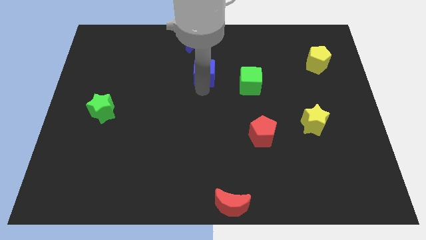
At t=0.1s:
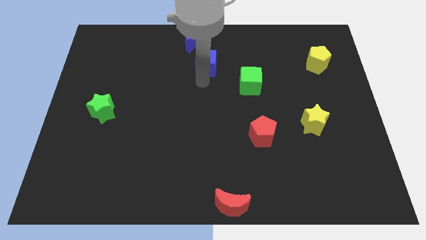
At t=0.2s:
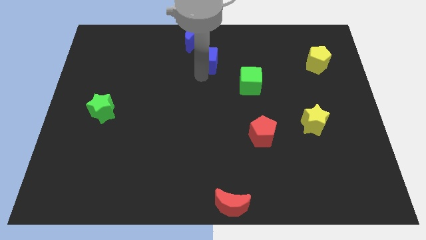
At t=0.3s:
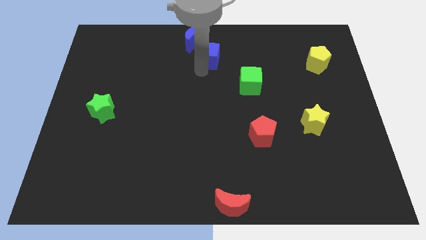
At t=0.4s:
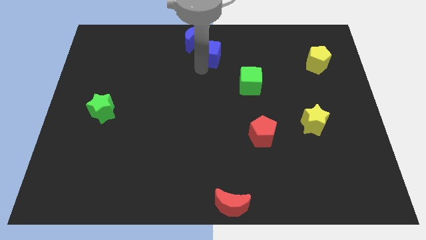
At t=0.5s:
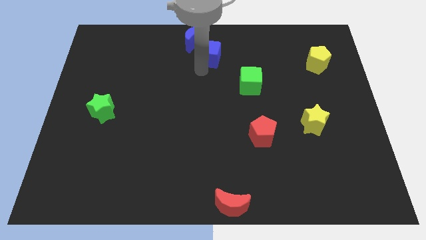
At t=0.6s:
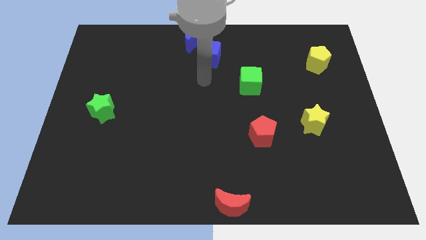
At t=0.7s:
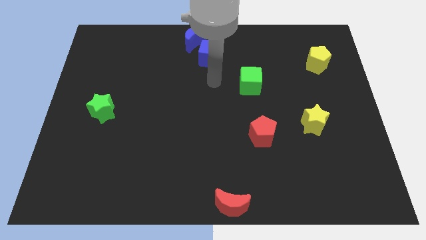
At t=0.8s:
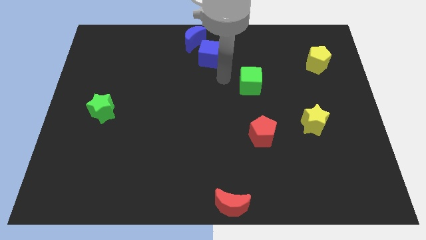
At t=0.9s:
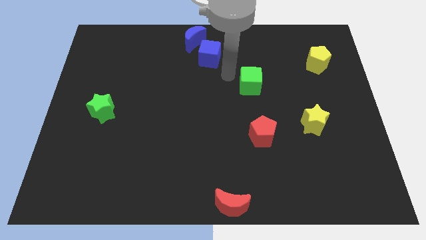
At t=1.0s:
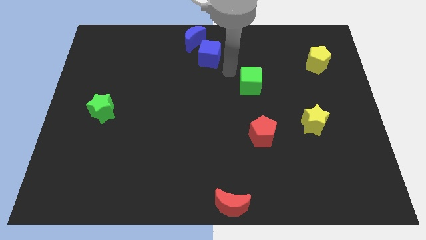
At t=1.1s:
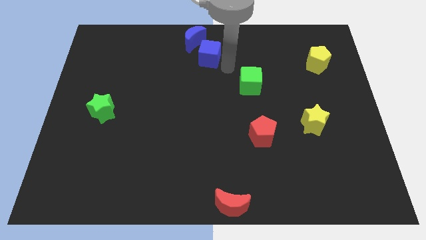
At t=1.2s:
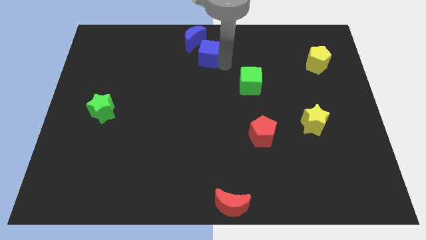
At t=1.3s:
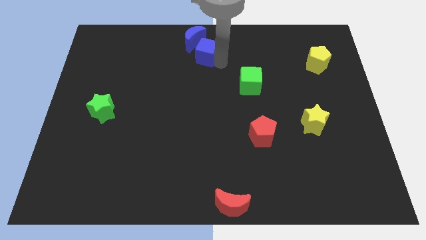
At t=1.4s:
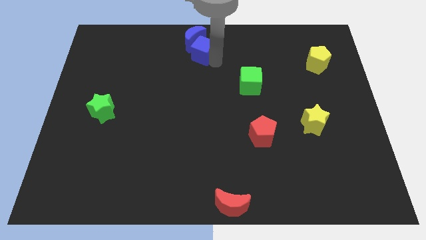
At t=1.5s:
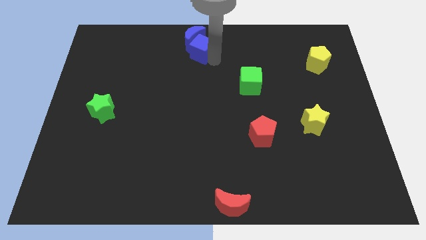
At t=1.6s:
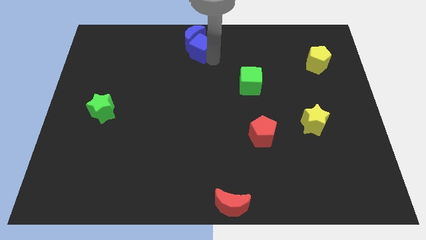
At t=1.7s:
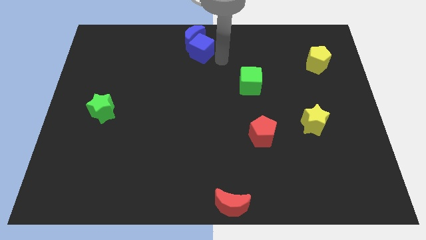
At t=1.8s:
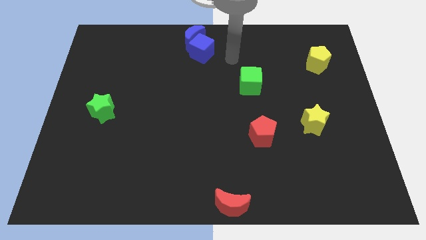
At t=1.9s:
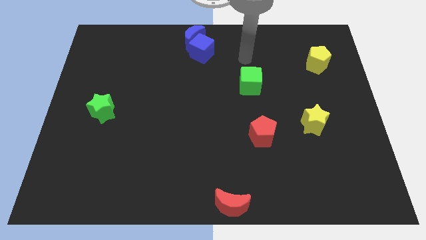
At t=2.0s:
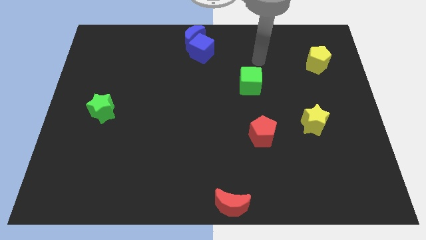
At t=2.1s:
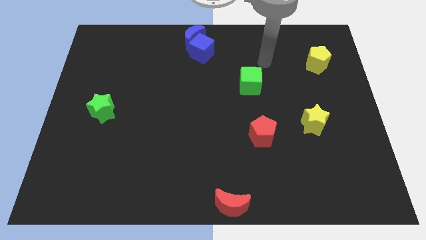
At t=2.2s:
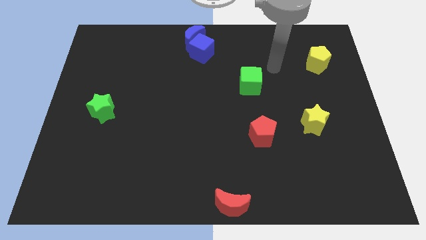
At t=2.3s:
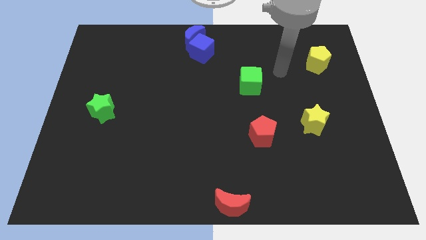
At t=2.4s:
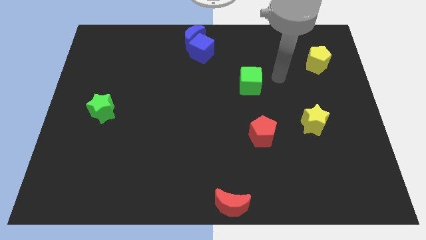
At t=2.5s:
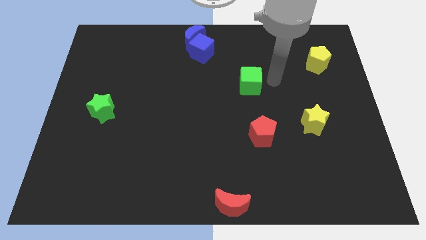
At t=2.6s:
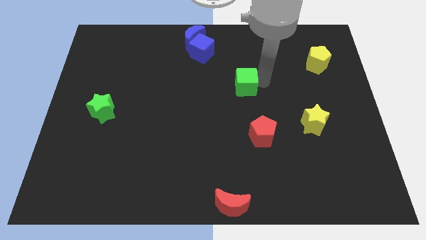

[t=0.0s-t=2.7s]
push blue crescent with the help of blue cube

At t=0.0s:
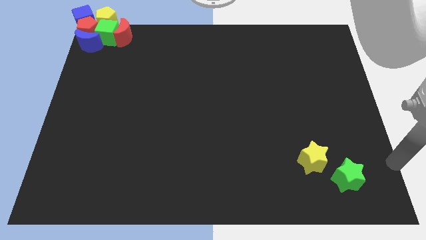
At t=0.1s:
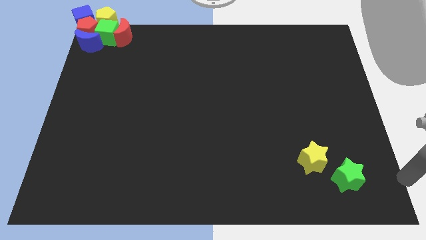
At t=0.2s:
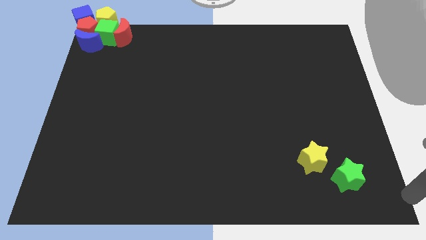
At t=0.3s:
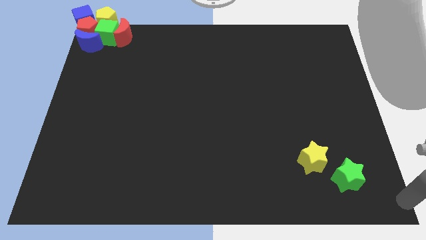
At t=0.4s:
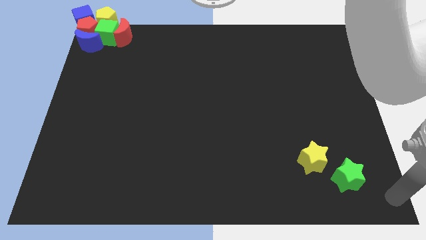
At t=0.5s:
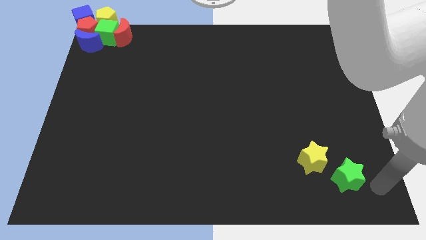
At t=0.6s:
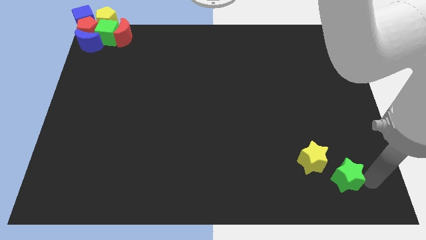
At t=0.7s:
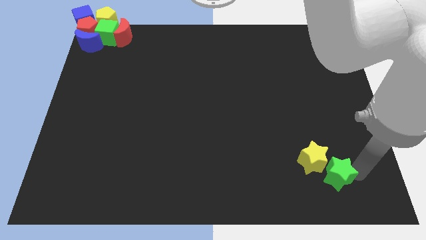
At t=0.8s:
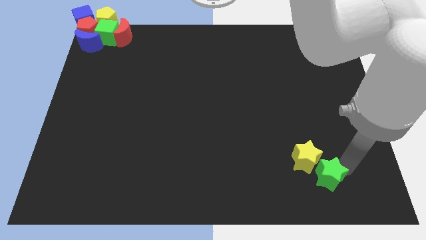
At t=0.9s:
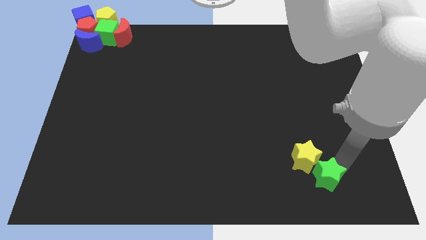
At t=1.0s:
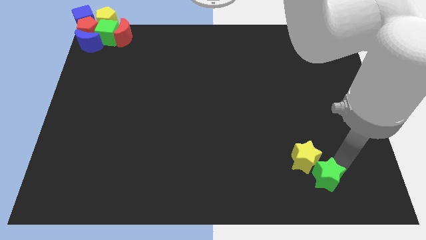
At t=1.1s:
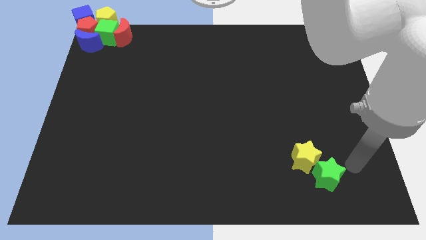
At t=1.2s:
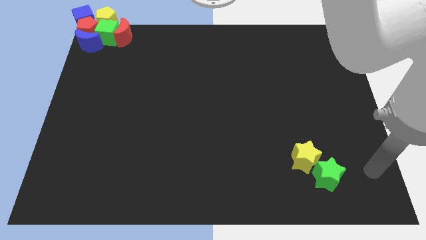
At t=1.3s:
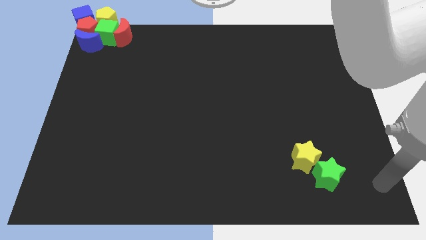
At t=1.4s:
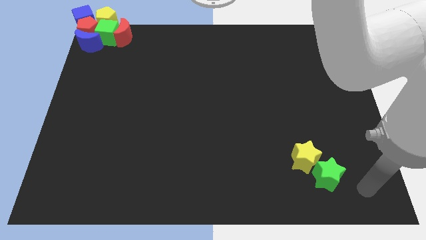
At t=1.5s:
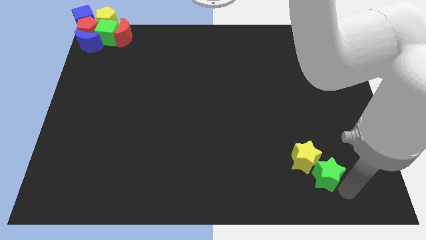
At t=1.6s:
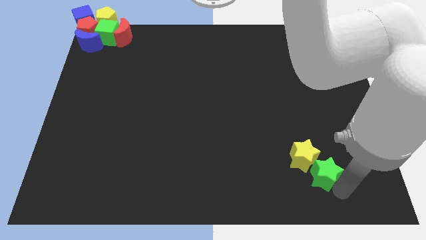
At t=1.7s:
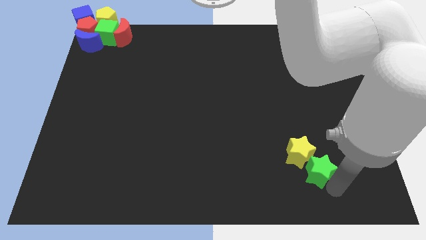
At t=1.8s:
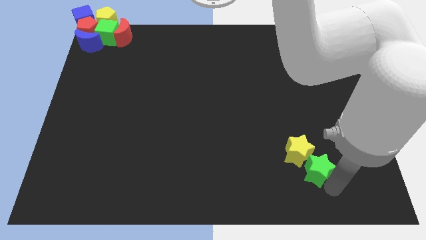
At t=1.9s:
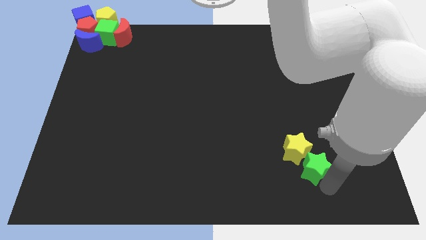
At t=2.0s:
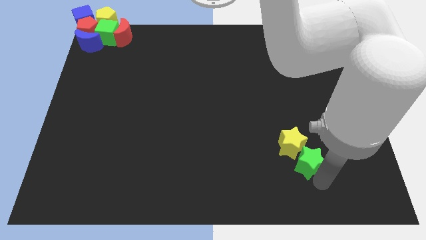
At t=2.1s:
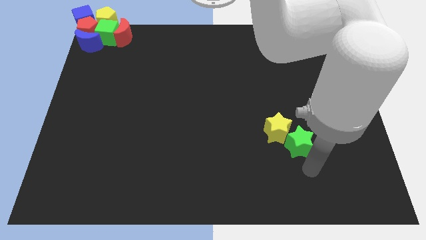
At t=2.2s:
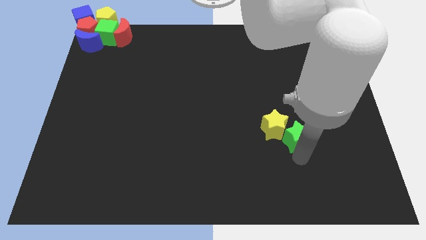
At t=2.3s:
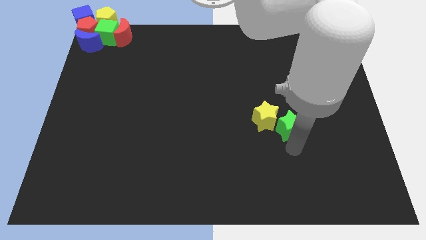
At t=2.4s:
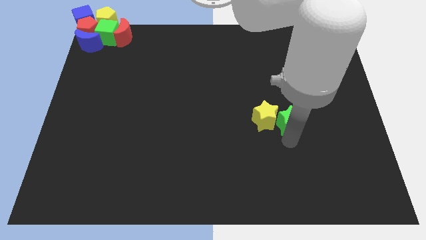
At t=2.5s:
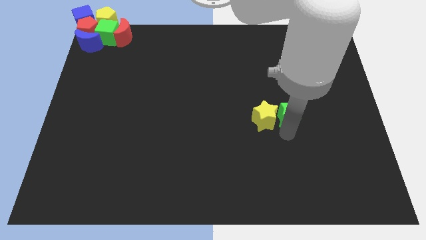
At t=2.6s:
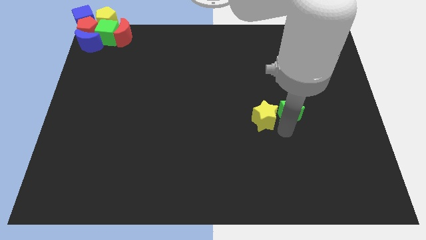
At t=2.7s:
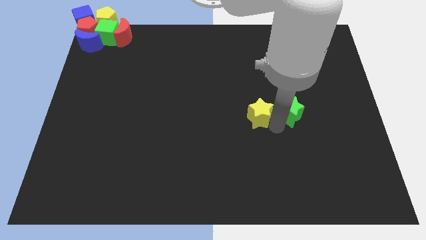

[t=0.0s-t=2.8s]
move the yellow star and green star slightly upwards

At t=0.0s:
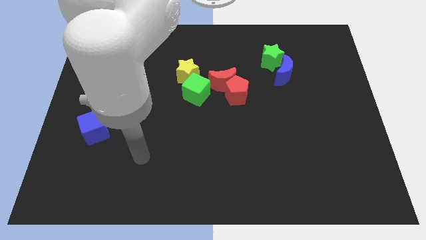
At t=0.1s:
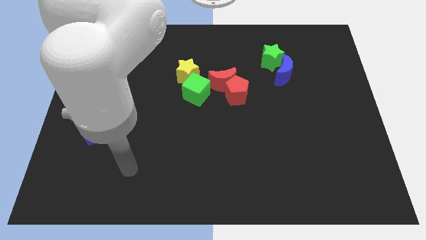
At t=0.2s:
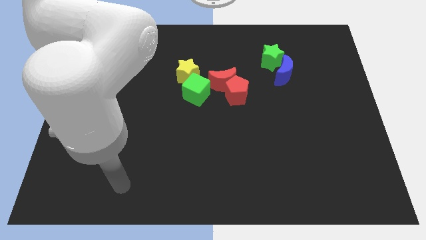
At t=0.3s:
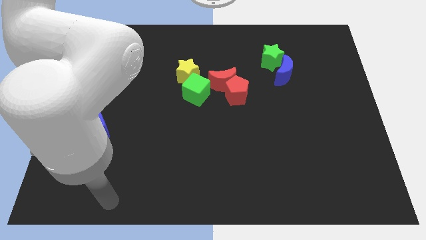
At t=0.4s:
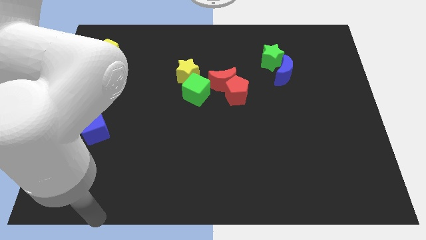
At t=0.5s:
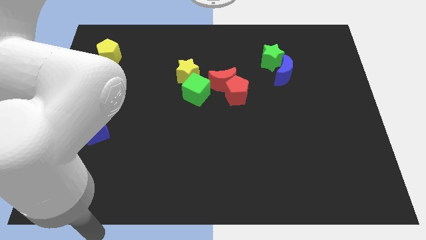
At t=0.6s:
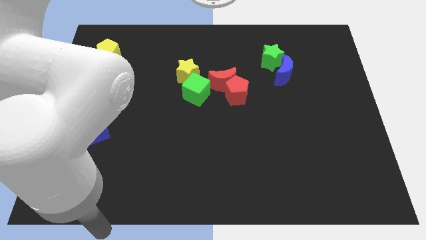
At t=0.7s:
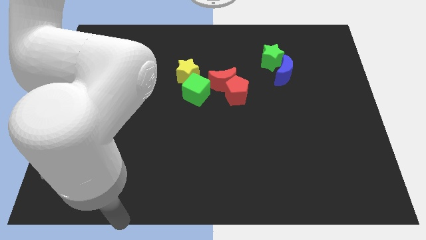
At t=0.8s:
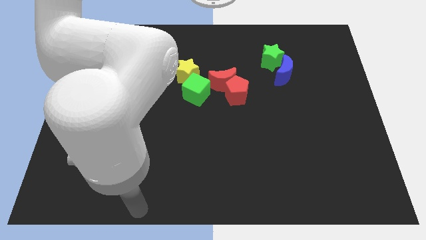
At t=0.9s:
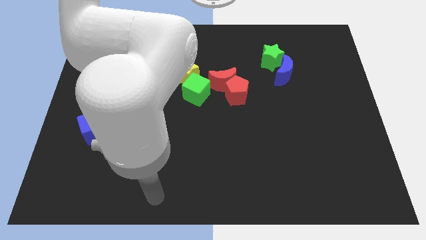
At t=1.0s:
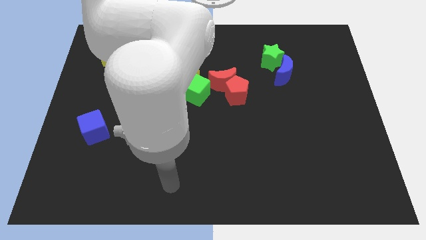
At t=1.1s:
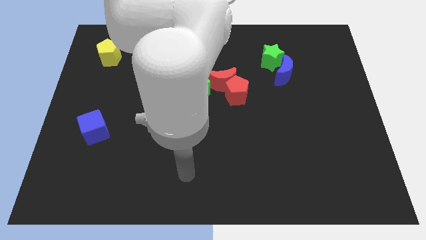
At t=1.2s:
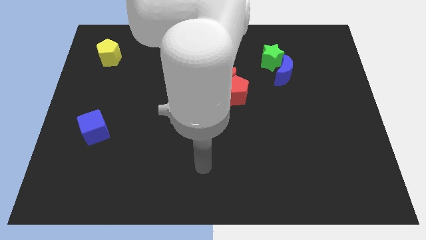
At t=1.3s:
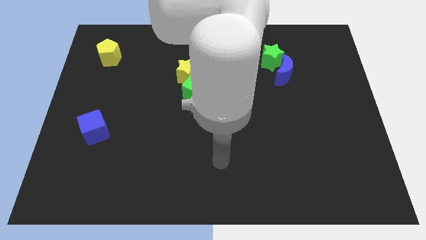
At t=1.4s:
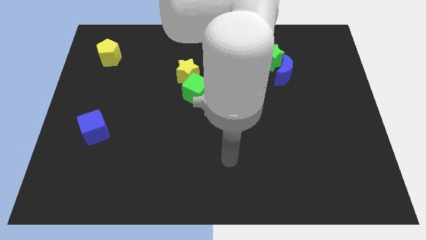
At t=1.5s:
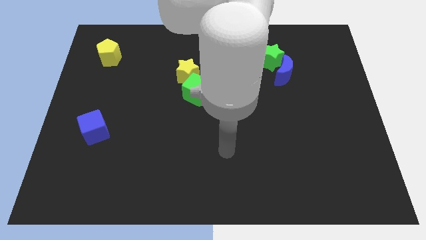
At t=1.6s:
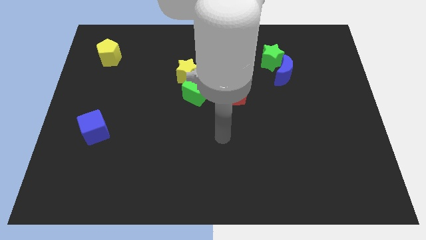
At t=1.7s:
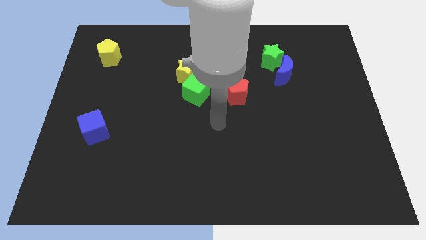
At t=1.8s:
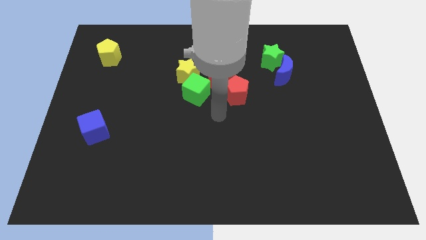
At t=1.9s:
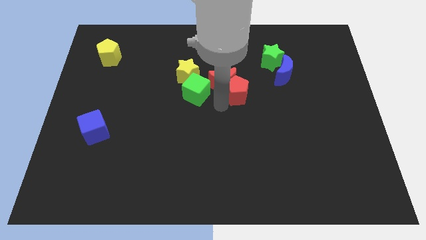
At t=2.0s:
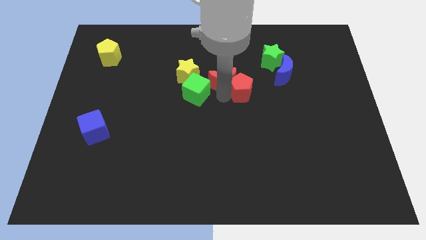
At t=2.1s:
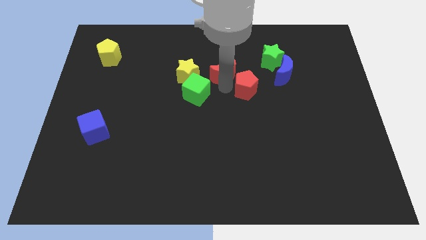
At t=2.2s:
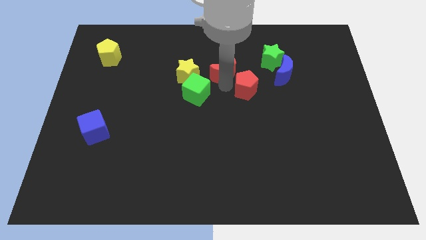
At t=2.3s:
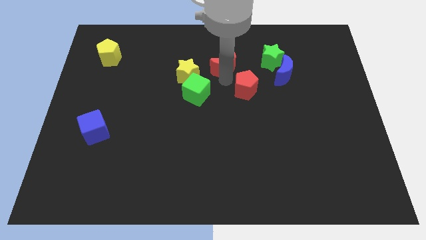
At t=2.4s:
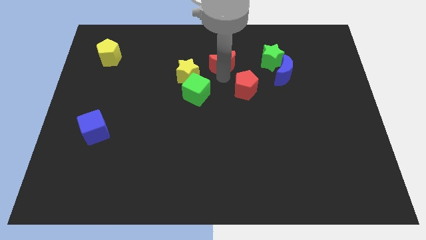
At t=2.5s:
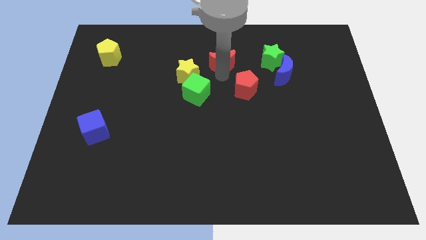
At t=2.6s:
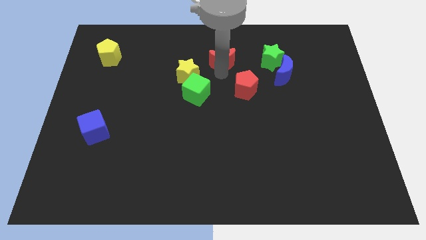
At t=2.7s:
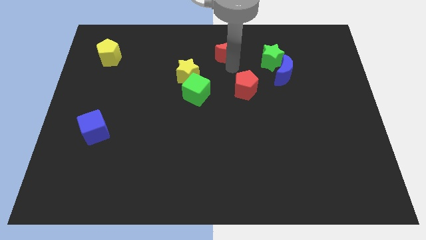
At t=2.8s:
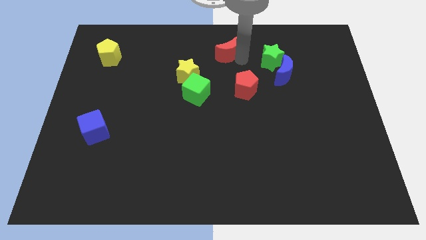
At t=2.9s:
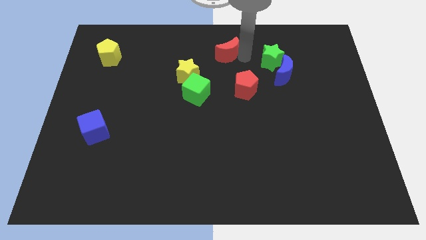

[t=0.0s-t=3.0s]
move your arm and separate the red blocks

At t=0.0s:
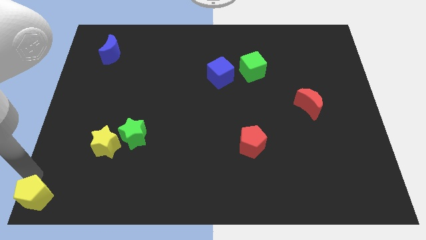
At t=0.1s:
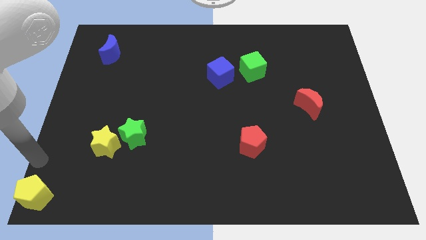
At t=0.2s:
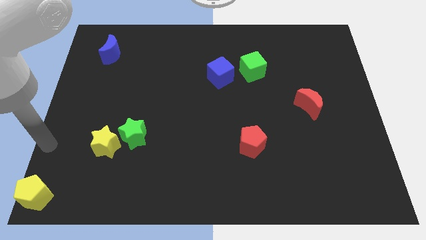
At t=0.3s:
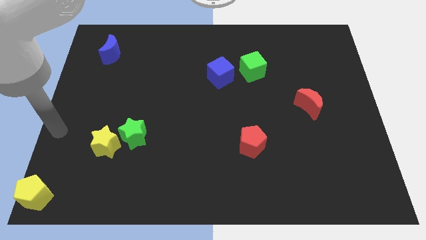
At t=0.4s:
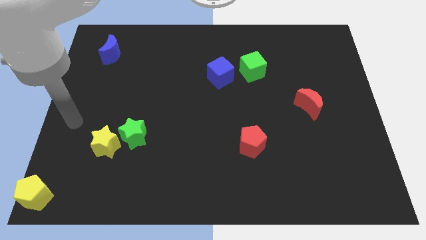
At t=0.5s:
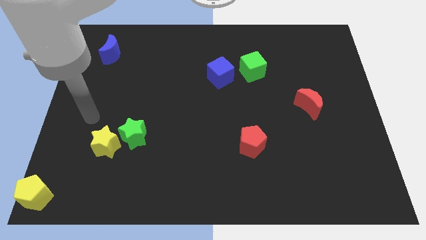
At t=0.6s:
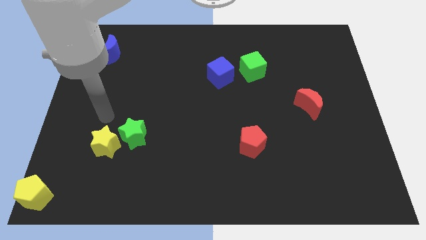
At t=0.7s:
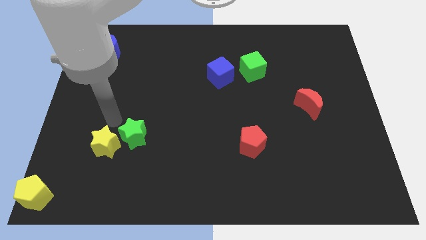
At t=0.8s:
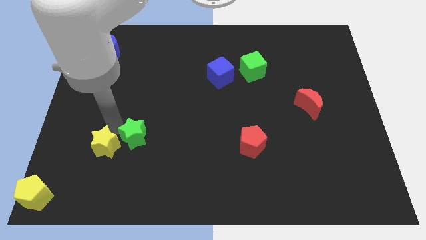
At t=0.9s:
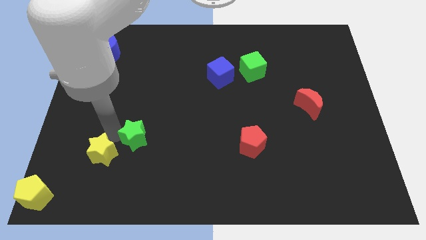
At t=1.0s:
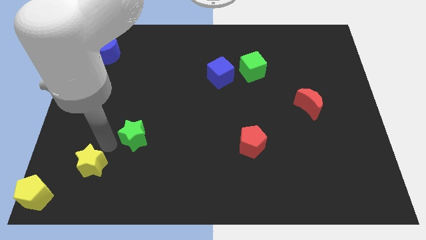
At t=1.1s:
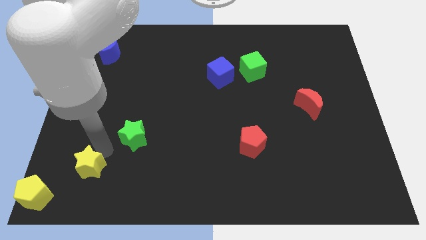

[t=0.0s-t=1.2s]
push the yellow star to the bottom left side
